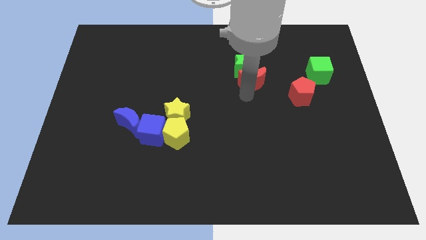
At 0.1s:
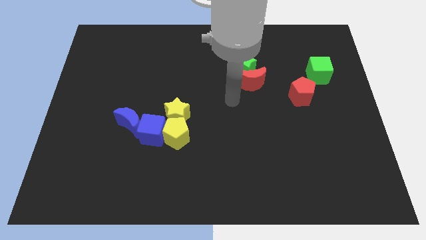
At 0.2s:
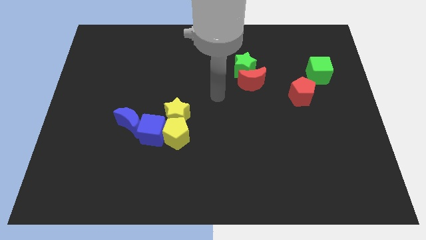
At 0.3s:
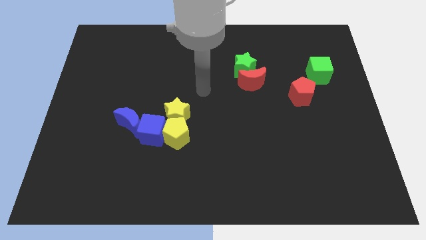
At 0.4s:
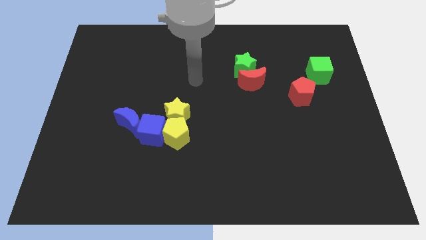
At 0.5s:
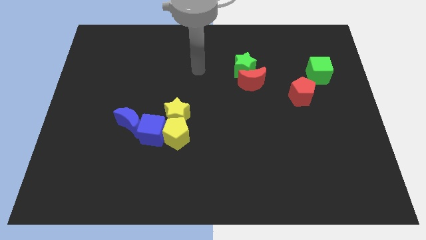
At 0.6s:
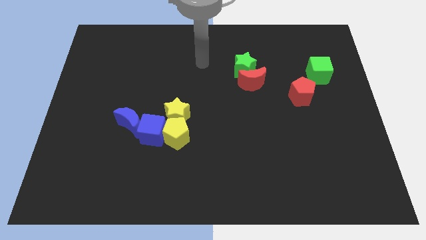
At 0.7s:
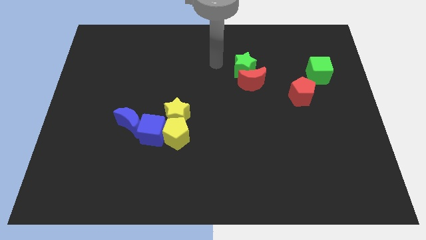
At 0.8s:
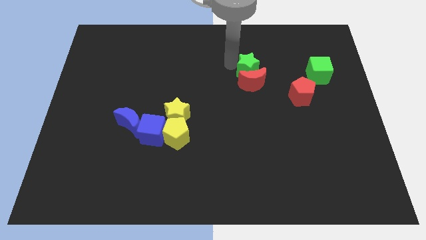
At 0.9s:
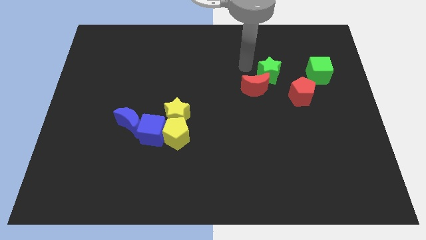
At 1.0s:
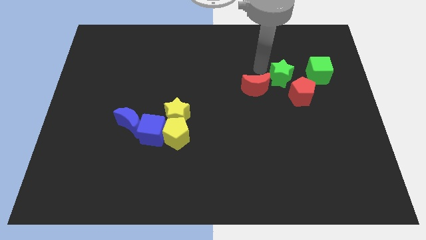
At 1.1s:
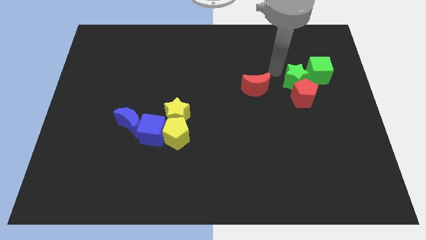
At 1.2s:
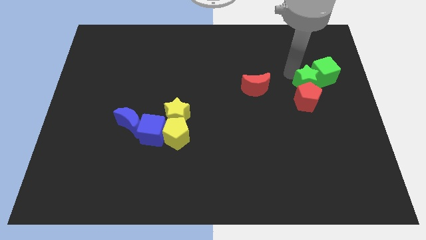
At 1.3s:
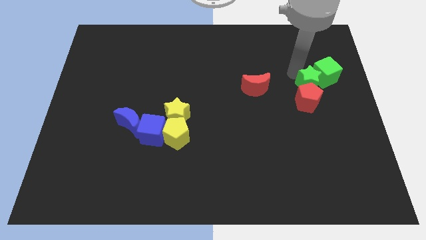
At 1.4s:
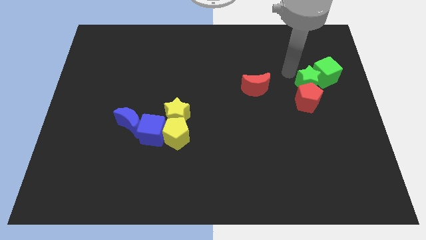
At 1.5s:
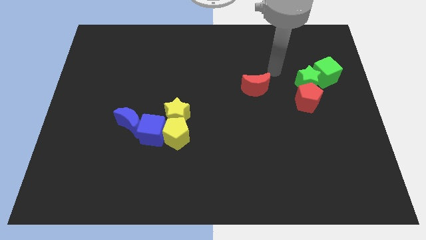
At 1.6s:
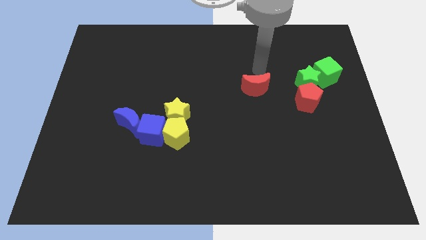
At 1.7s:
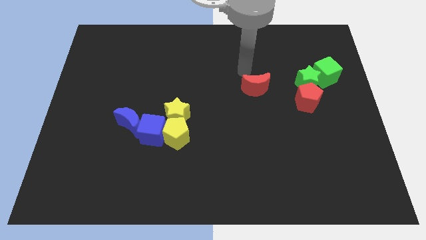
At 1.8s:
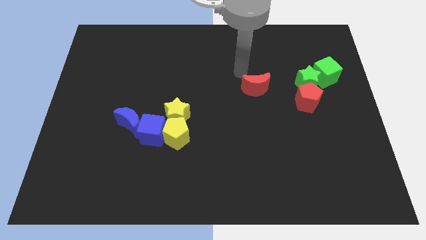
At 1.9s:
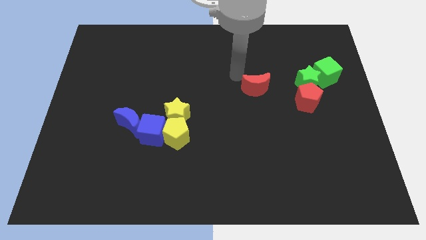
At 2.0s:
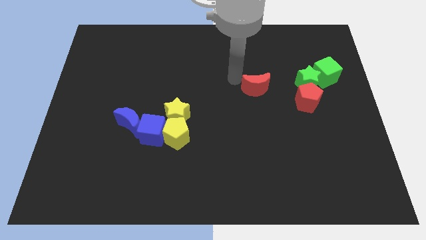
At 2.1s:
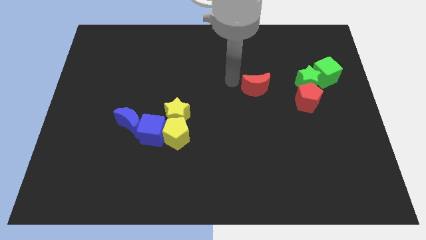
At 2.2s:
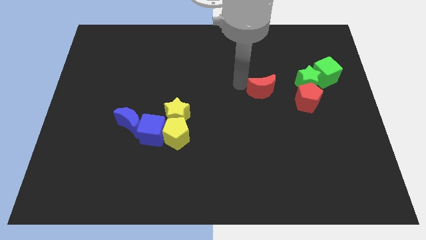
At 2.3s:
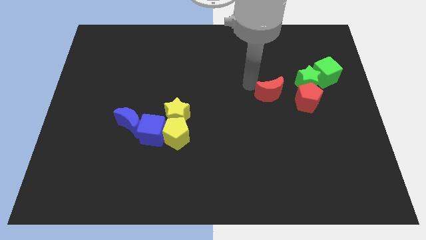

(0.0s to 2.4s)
drag the green star into the green cube

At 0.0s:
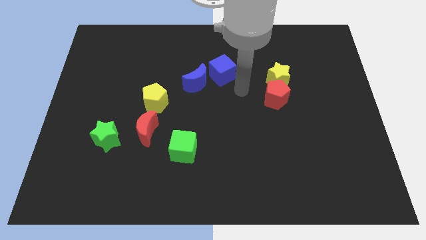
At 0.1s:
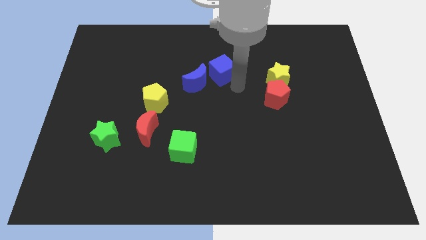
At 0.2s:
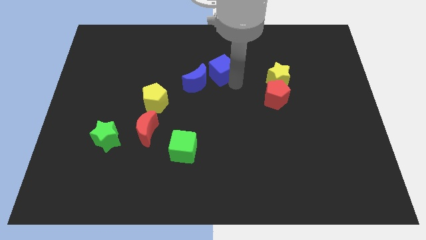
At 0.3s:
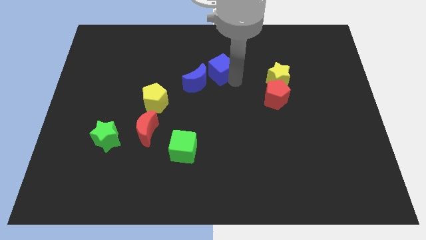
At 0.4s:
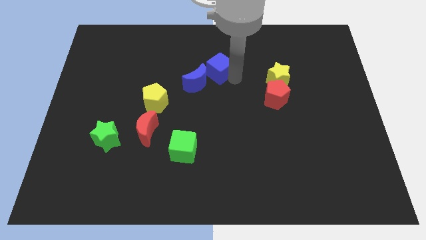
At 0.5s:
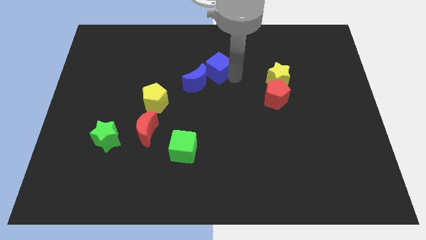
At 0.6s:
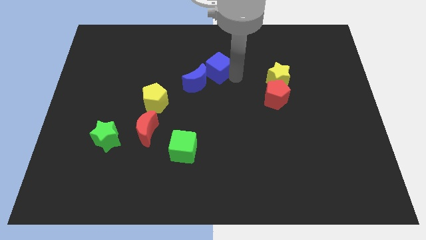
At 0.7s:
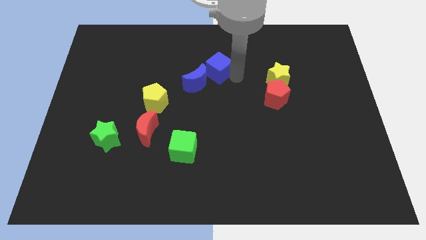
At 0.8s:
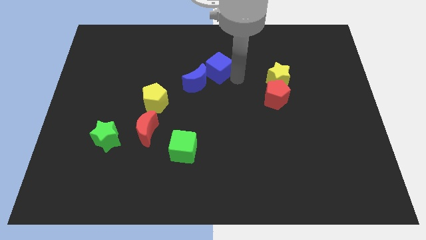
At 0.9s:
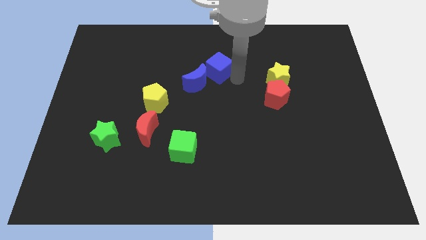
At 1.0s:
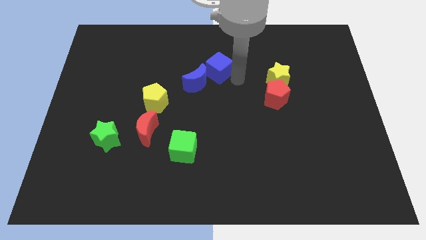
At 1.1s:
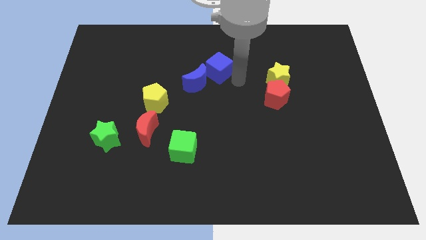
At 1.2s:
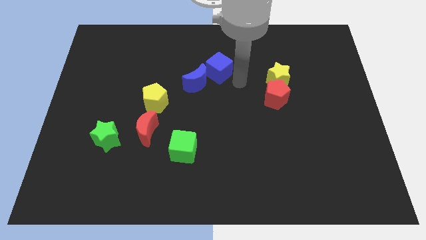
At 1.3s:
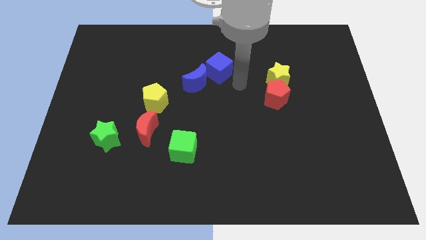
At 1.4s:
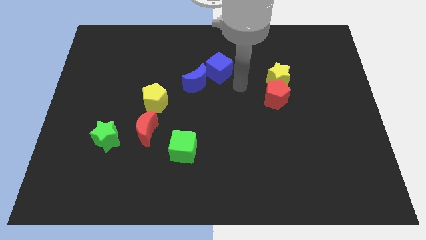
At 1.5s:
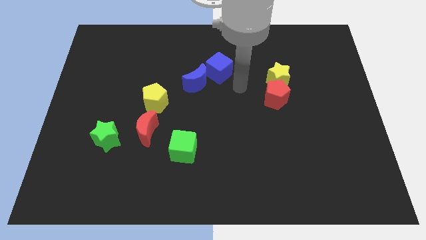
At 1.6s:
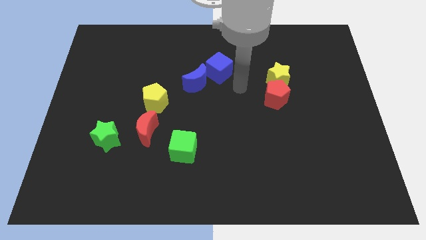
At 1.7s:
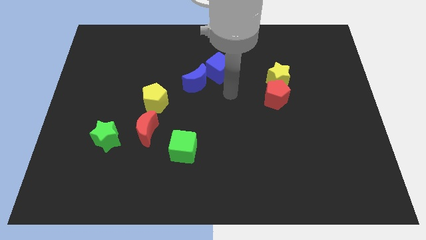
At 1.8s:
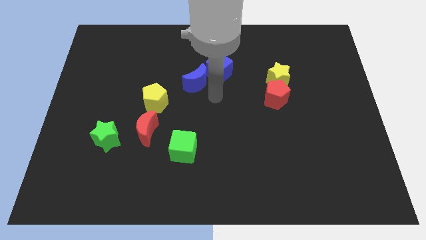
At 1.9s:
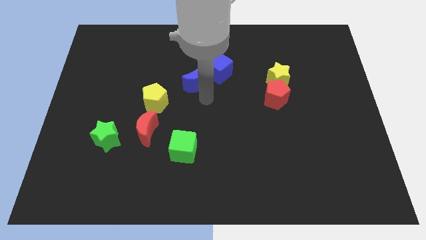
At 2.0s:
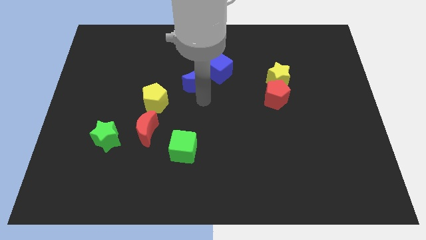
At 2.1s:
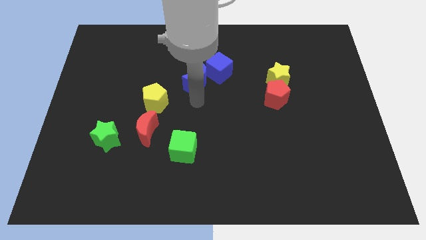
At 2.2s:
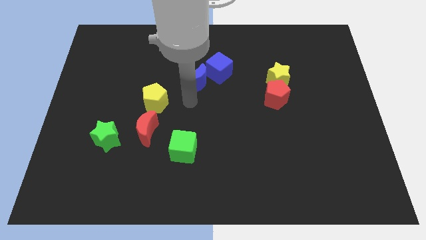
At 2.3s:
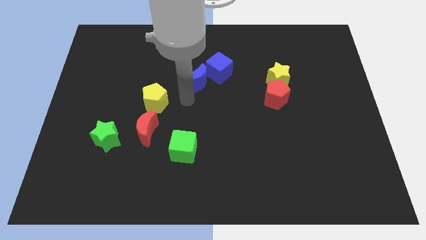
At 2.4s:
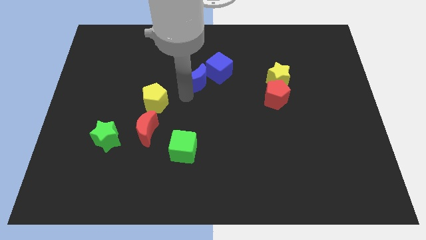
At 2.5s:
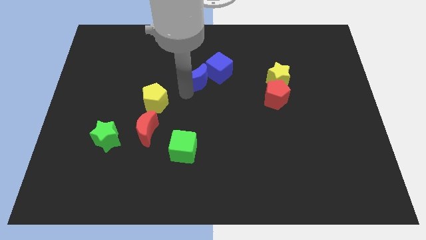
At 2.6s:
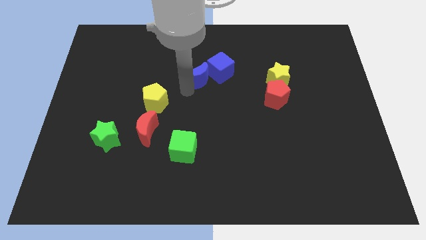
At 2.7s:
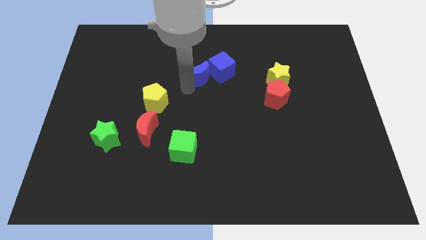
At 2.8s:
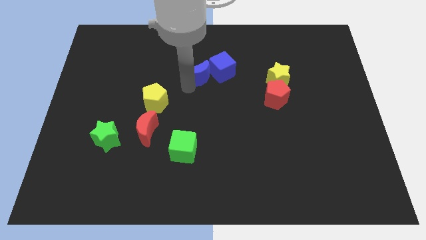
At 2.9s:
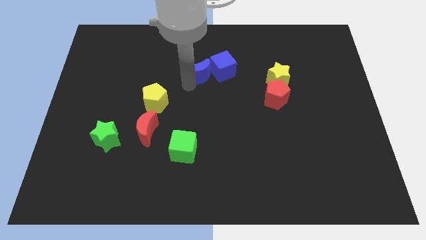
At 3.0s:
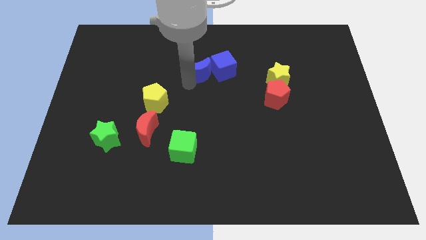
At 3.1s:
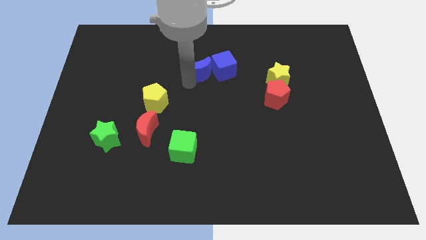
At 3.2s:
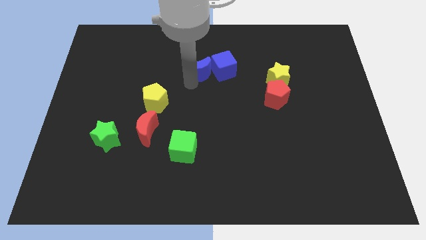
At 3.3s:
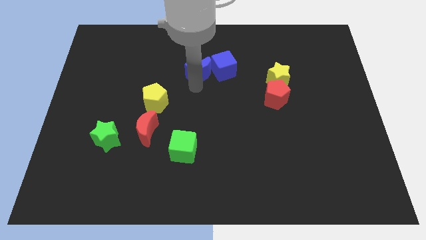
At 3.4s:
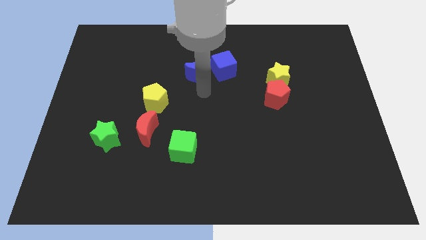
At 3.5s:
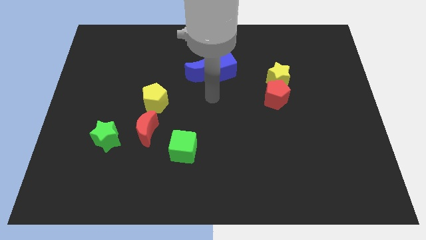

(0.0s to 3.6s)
move the blue cube along with blue crescent to the top of the board

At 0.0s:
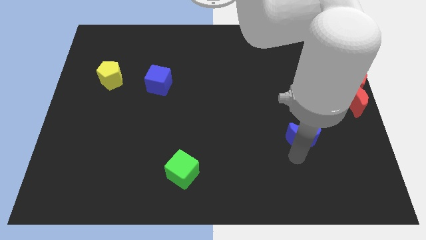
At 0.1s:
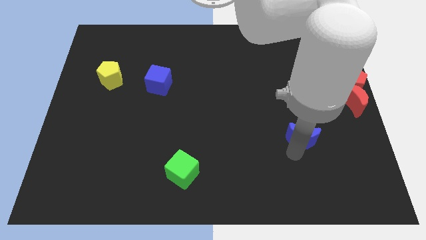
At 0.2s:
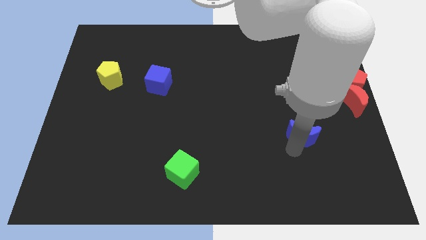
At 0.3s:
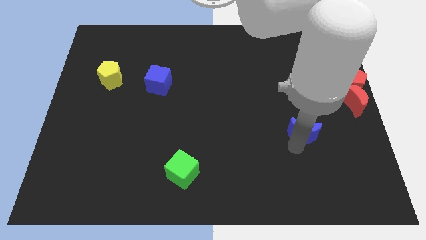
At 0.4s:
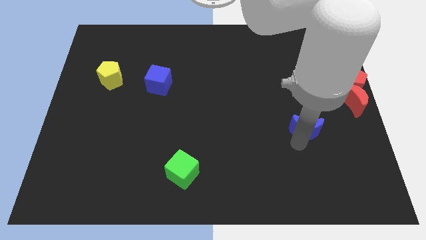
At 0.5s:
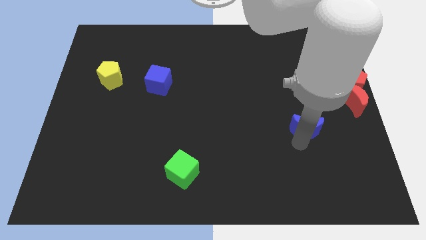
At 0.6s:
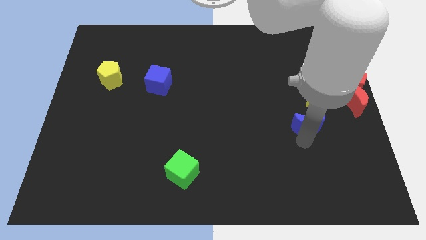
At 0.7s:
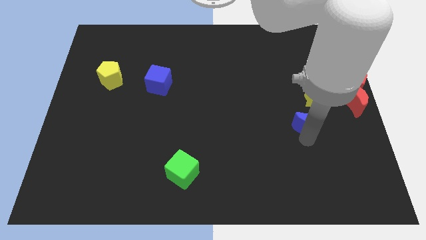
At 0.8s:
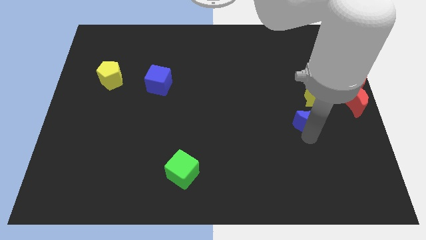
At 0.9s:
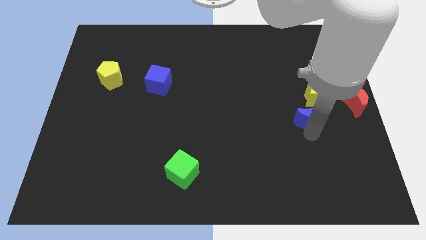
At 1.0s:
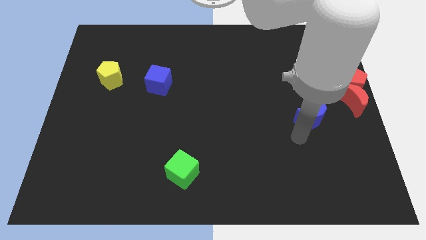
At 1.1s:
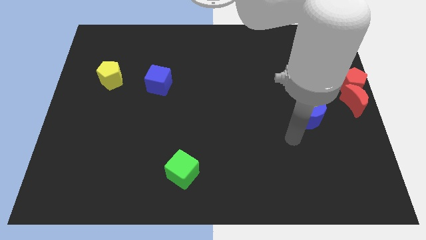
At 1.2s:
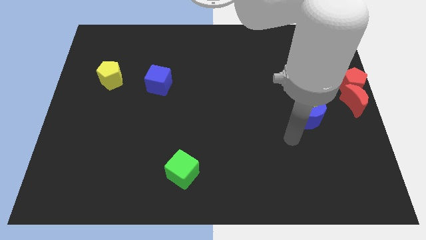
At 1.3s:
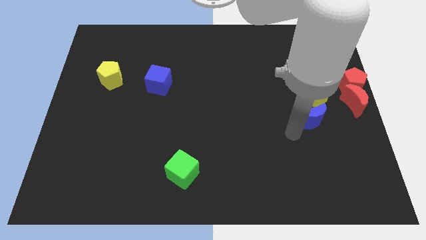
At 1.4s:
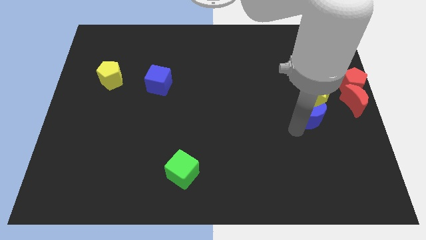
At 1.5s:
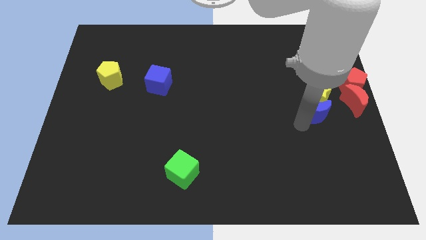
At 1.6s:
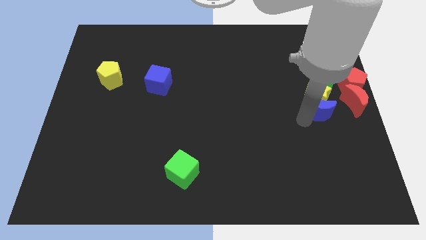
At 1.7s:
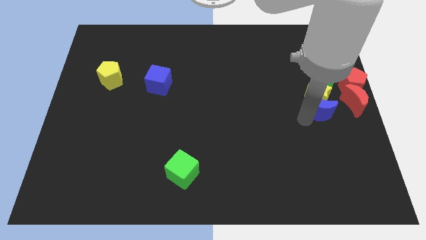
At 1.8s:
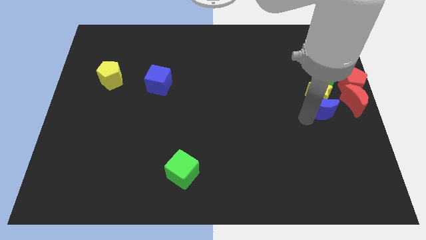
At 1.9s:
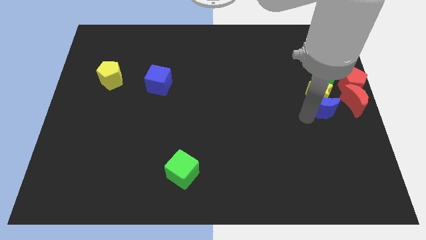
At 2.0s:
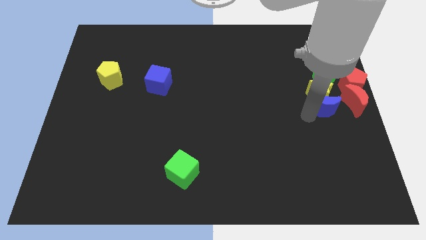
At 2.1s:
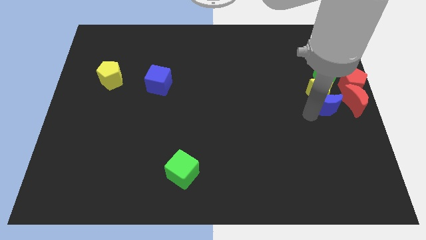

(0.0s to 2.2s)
place blue moon below yellow star

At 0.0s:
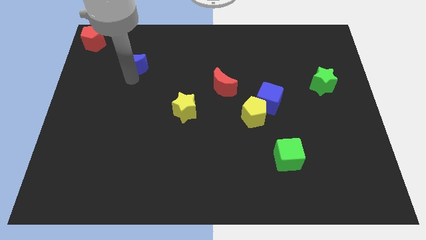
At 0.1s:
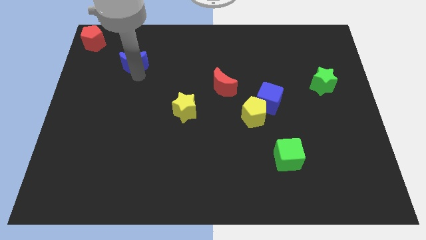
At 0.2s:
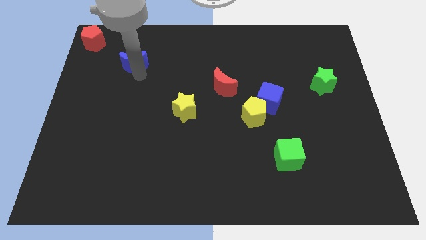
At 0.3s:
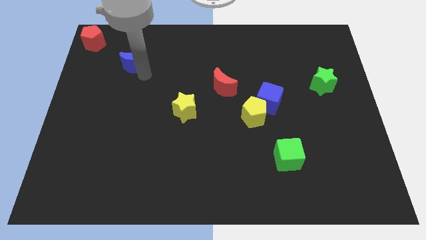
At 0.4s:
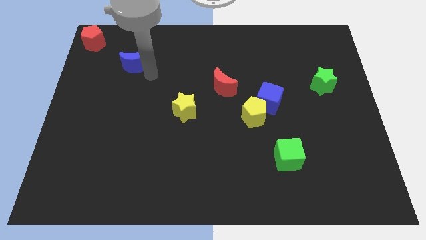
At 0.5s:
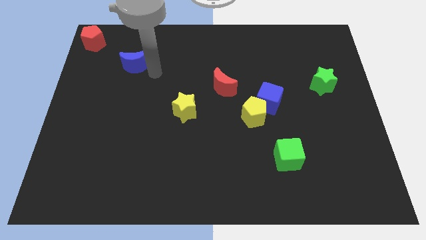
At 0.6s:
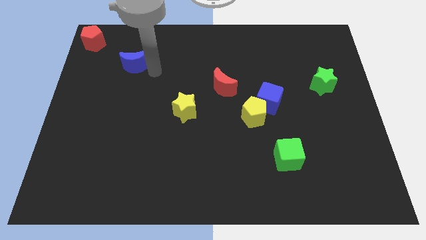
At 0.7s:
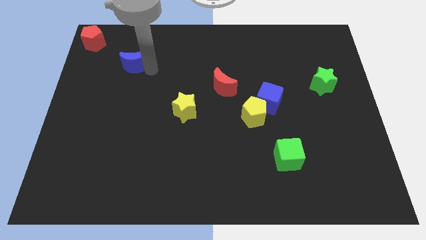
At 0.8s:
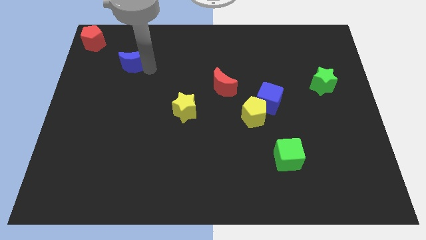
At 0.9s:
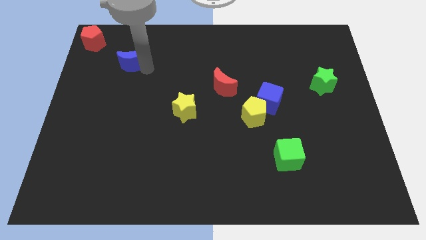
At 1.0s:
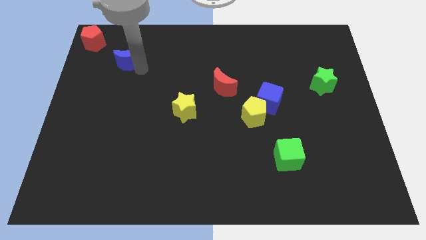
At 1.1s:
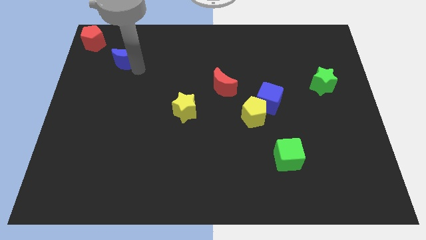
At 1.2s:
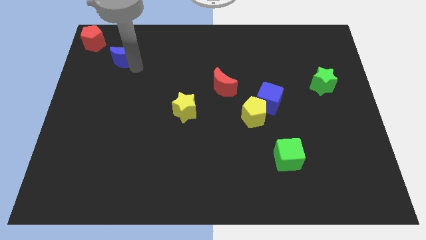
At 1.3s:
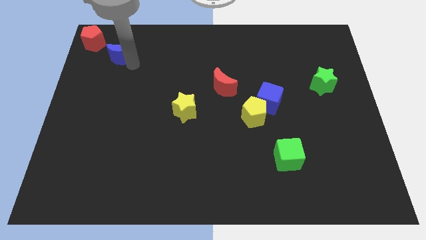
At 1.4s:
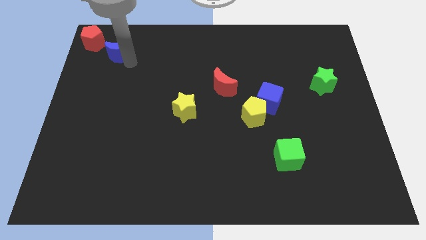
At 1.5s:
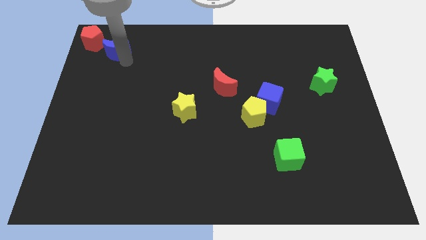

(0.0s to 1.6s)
move the blue crescent to the right of the red pentagon
